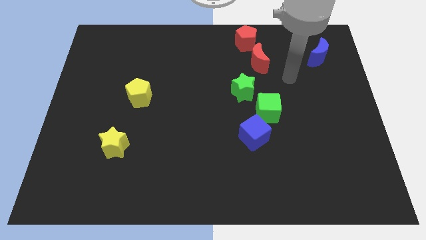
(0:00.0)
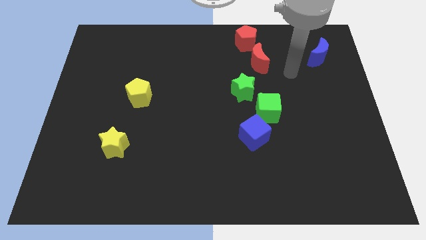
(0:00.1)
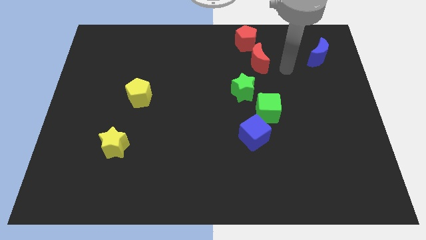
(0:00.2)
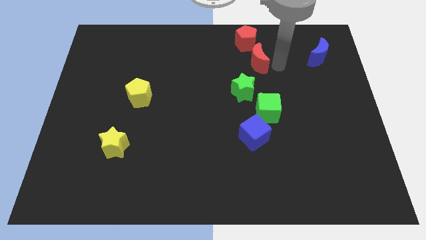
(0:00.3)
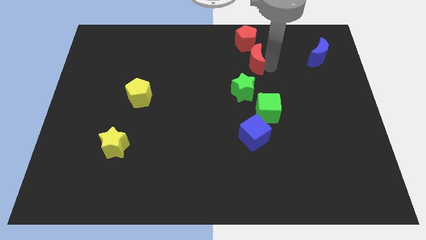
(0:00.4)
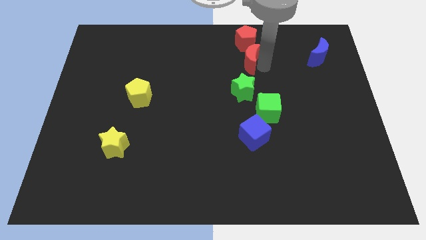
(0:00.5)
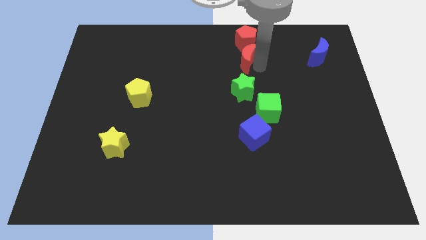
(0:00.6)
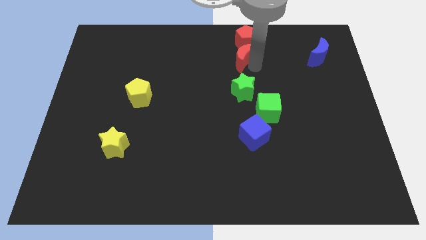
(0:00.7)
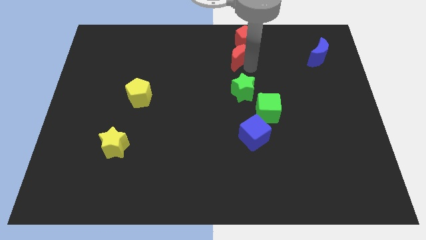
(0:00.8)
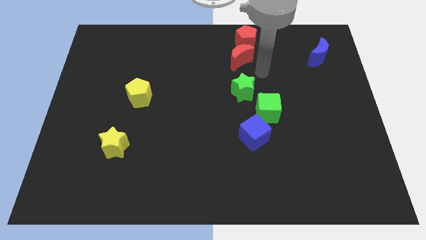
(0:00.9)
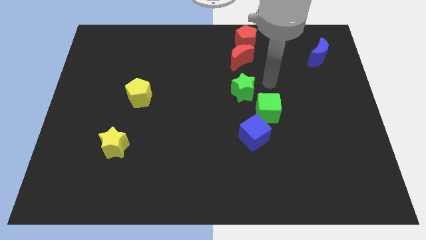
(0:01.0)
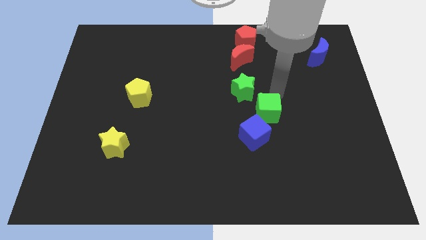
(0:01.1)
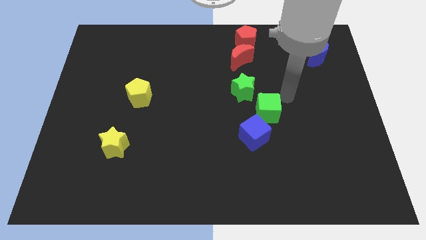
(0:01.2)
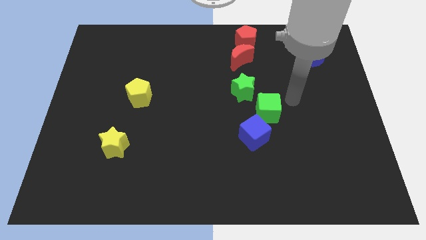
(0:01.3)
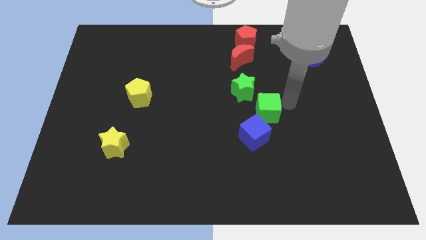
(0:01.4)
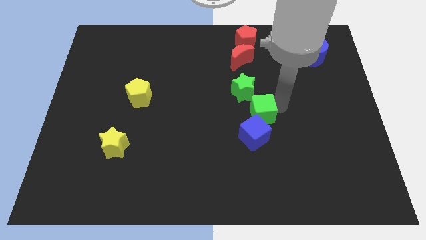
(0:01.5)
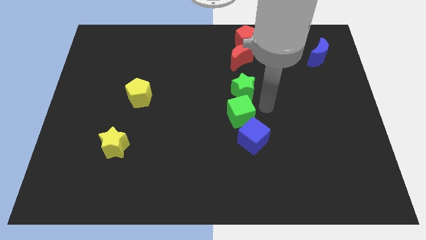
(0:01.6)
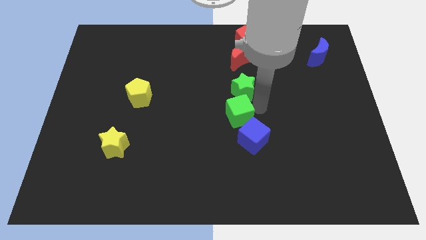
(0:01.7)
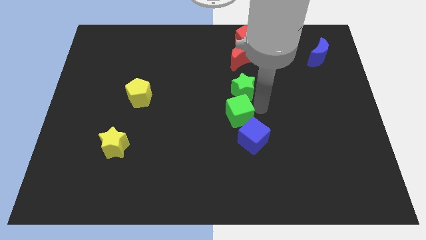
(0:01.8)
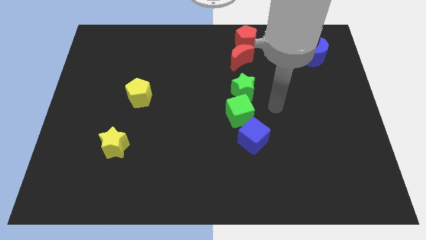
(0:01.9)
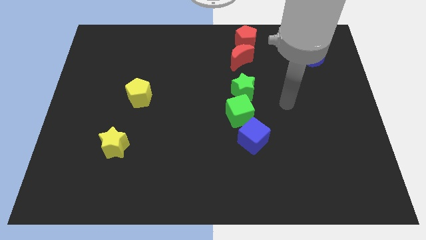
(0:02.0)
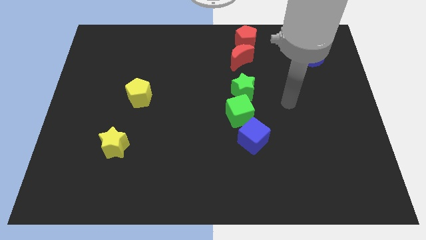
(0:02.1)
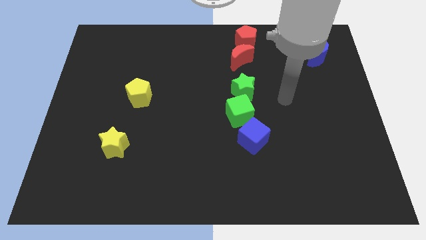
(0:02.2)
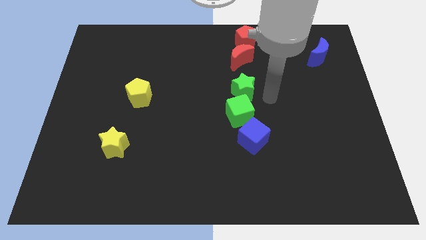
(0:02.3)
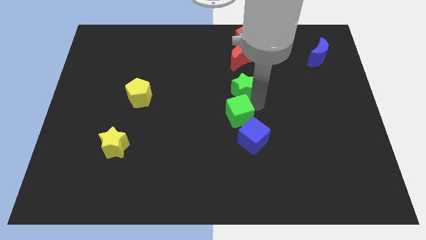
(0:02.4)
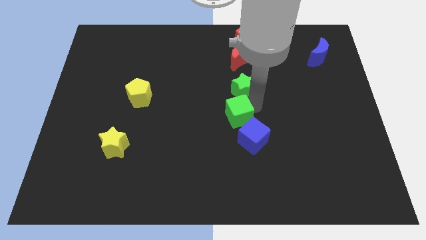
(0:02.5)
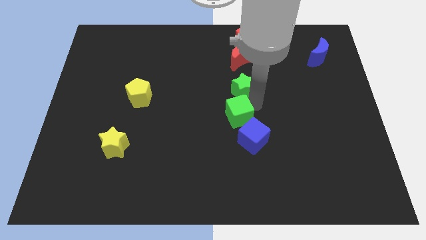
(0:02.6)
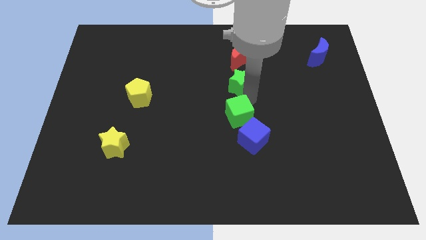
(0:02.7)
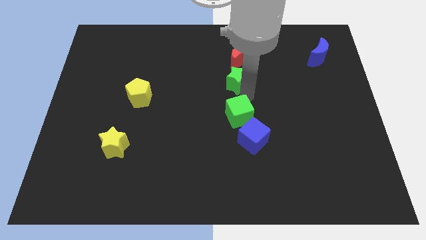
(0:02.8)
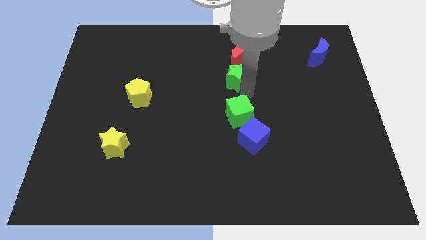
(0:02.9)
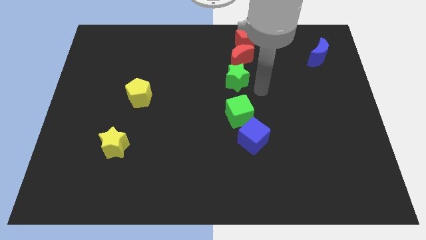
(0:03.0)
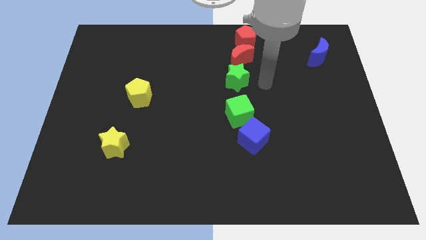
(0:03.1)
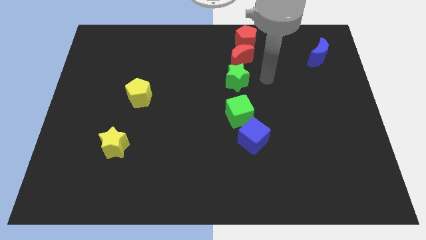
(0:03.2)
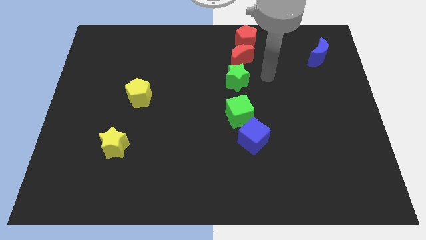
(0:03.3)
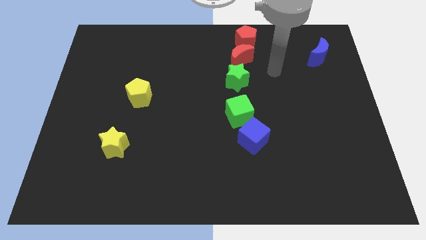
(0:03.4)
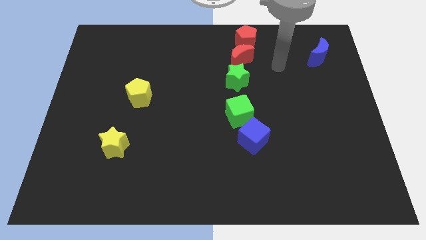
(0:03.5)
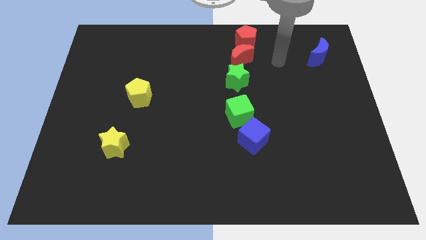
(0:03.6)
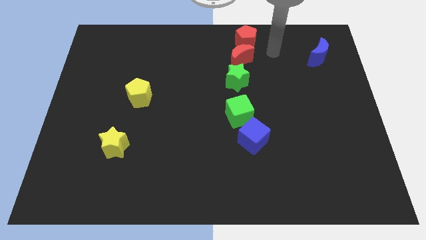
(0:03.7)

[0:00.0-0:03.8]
adjust both the green blocks and red crescent vertically below the red pentagon

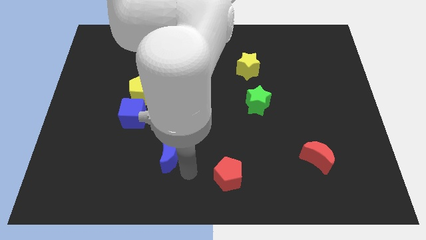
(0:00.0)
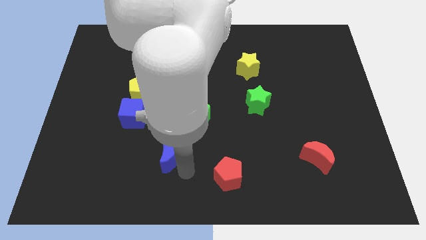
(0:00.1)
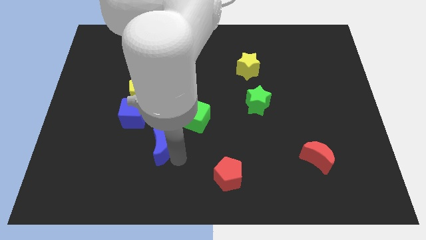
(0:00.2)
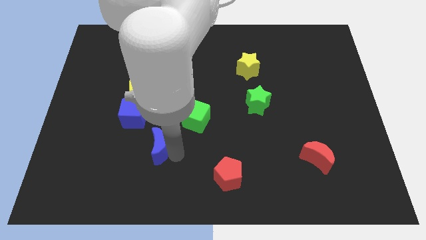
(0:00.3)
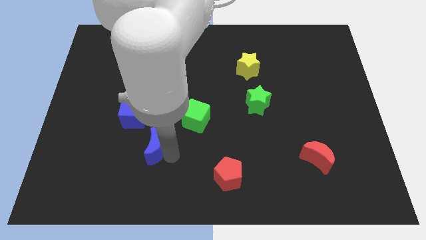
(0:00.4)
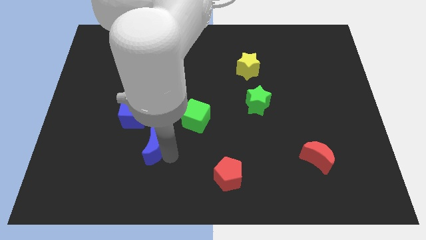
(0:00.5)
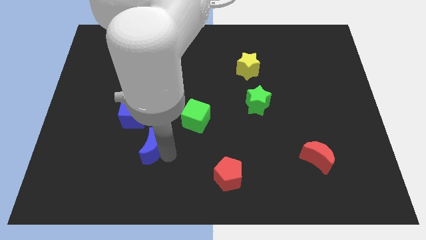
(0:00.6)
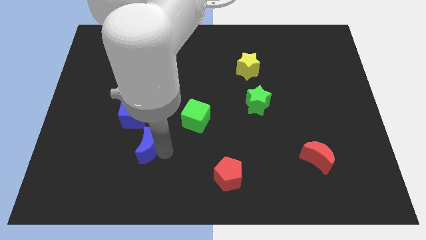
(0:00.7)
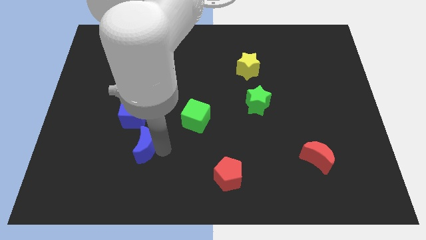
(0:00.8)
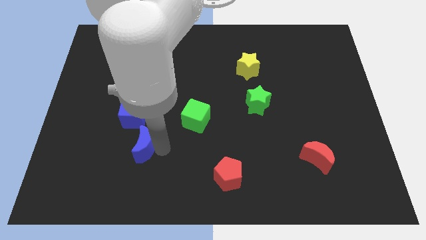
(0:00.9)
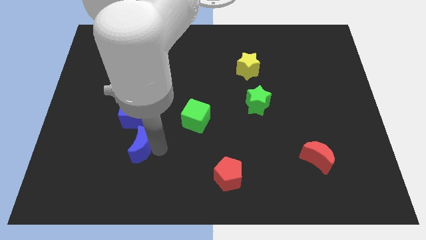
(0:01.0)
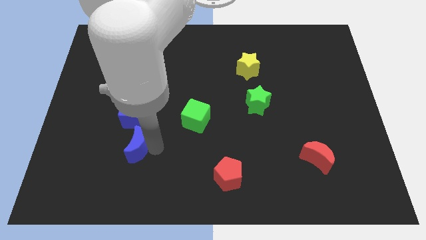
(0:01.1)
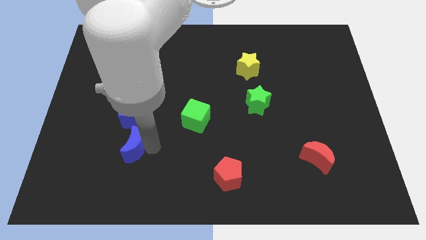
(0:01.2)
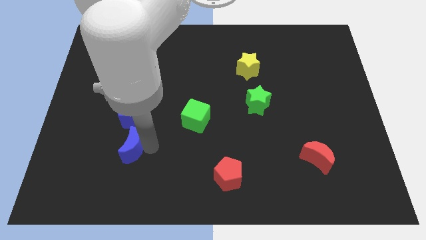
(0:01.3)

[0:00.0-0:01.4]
push the blue crescent to the bottom of the blue cube

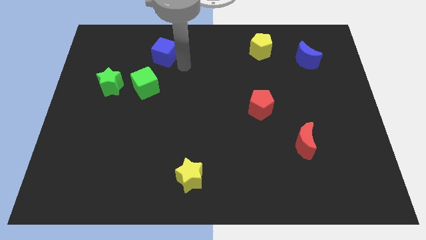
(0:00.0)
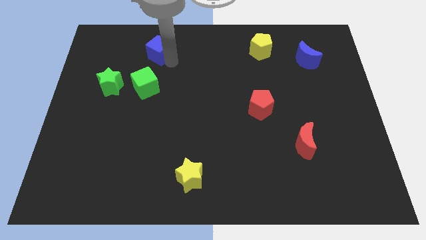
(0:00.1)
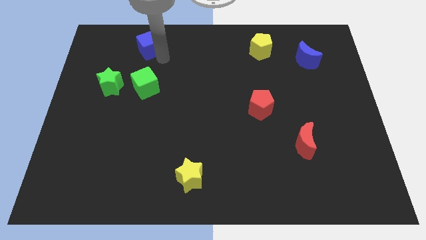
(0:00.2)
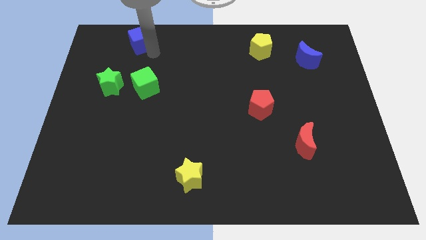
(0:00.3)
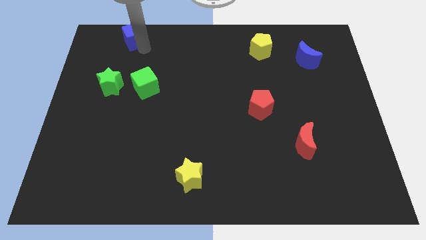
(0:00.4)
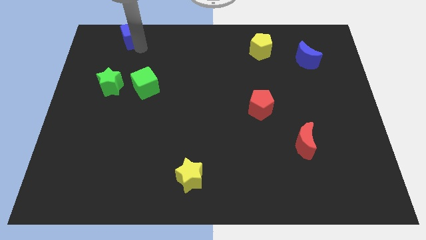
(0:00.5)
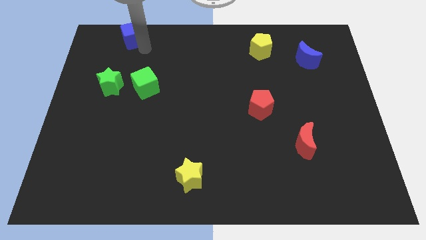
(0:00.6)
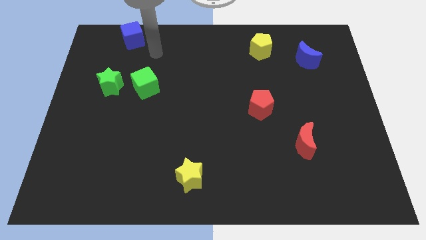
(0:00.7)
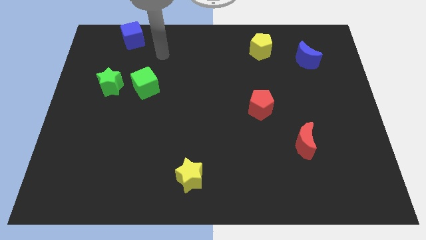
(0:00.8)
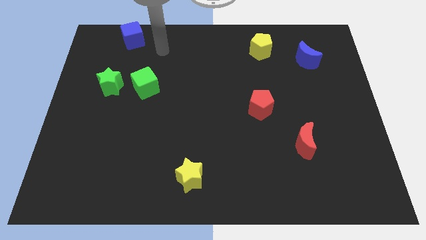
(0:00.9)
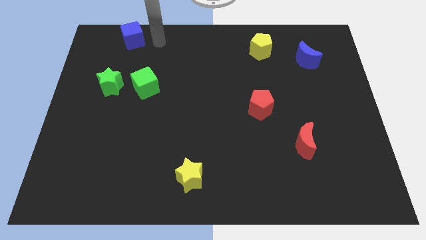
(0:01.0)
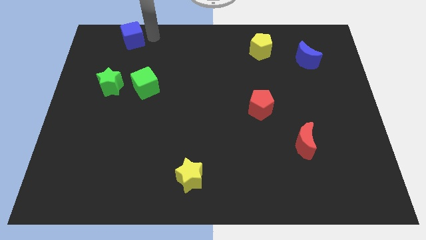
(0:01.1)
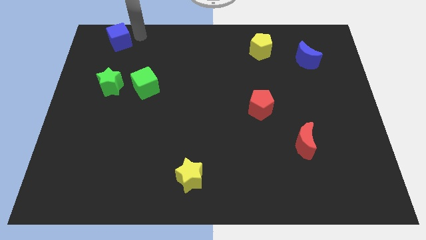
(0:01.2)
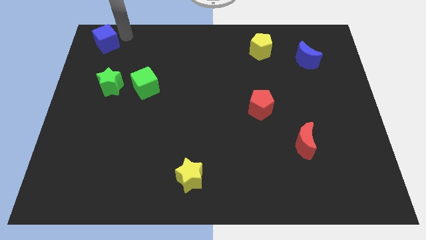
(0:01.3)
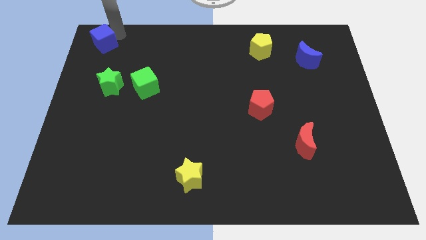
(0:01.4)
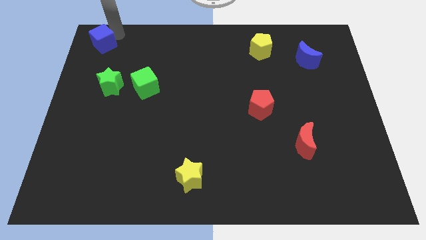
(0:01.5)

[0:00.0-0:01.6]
move blue cube to the top of green star

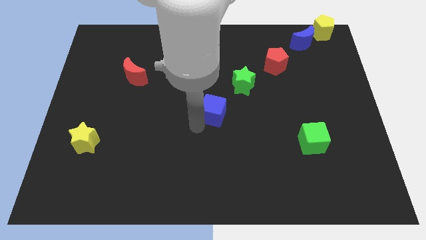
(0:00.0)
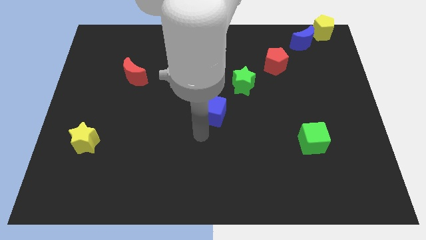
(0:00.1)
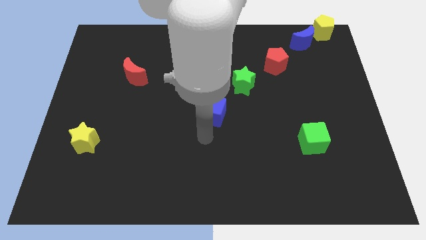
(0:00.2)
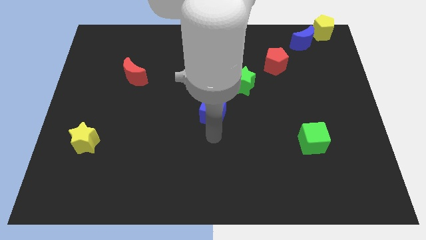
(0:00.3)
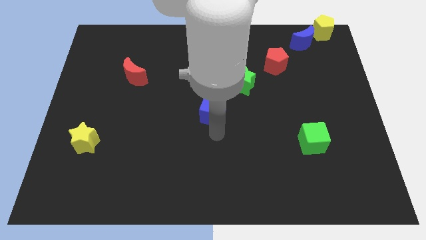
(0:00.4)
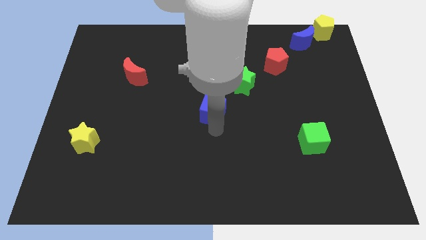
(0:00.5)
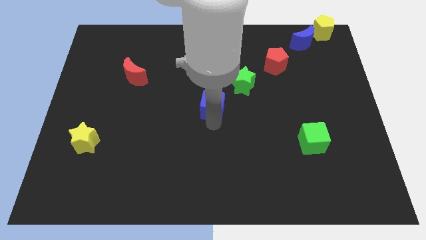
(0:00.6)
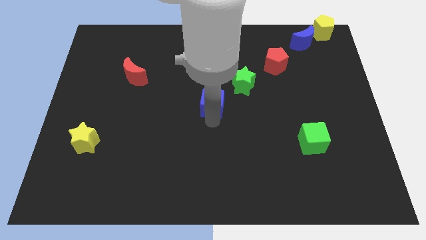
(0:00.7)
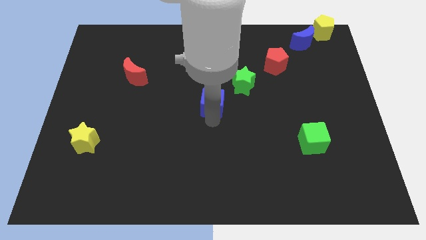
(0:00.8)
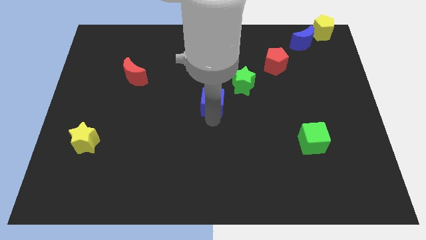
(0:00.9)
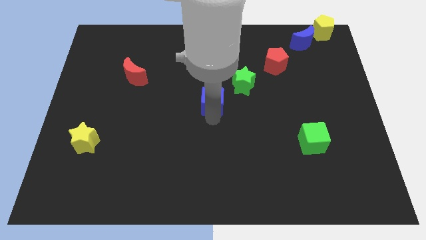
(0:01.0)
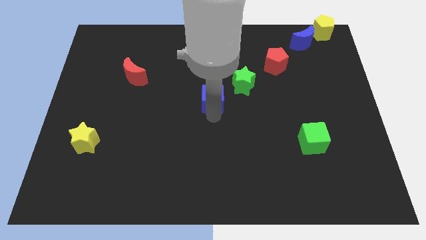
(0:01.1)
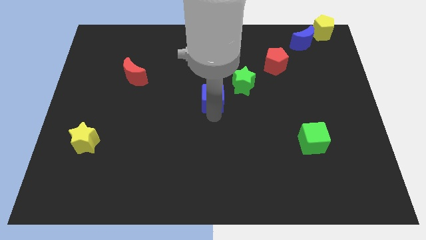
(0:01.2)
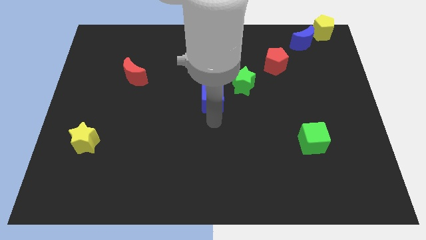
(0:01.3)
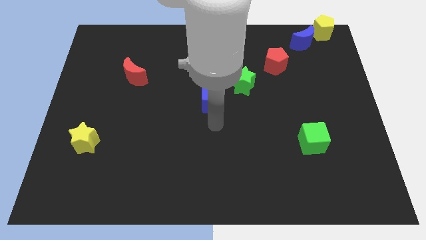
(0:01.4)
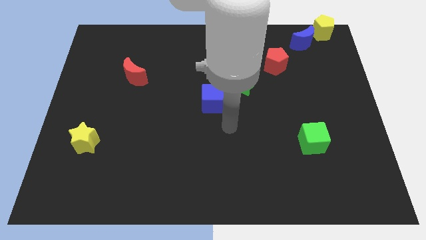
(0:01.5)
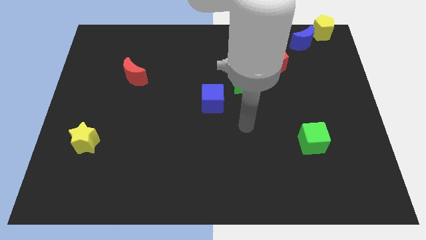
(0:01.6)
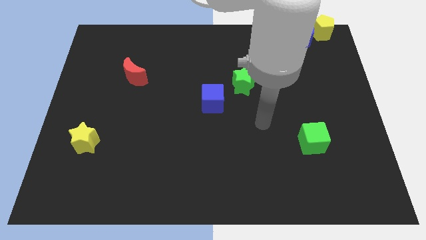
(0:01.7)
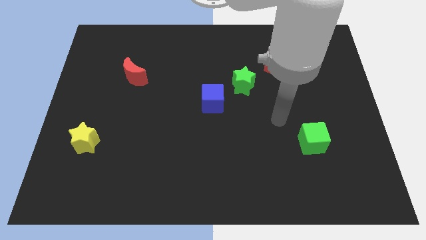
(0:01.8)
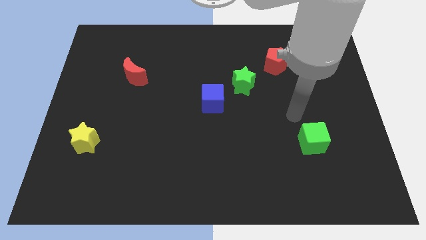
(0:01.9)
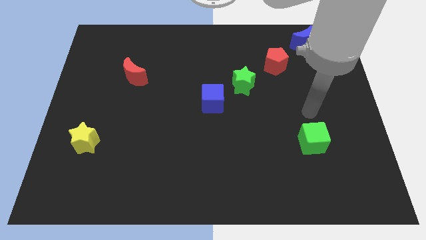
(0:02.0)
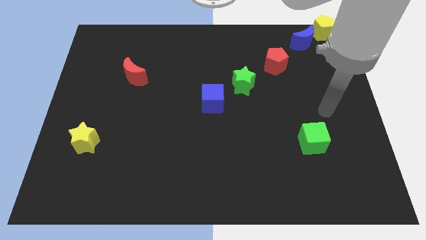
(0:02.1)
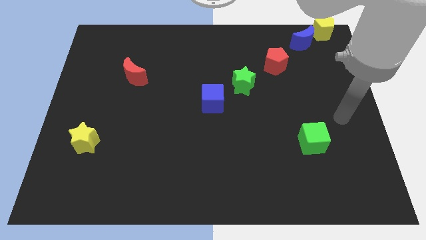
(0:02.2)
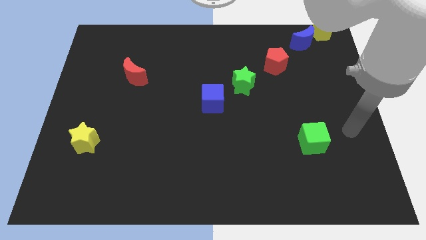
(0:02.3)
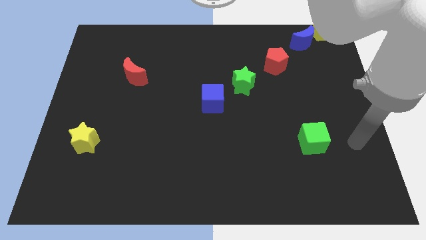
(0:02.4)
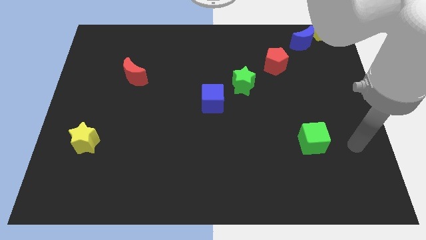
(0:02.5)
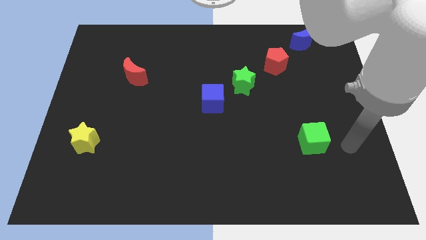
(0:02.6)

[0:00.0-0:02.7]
slide up the blue cube upward
